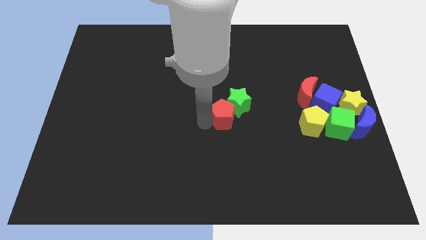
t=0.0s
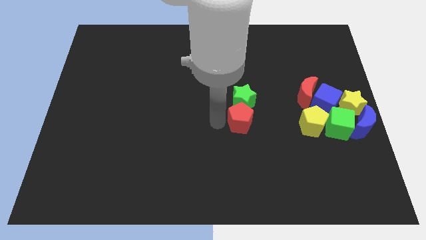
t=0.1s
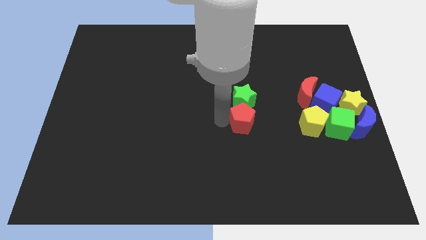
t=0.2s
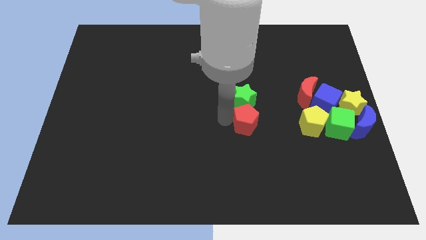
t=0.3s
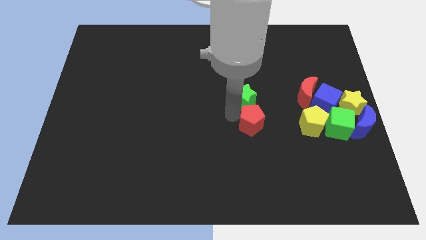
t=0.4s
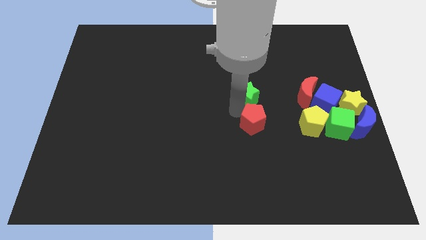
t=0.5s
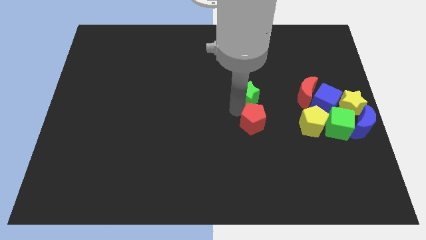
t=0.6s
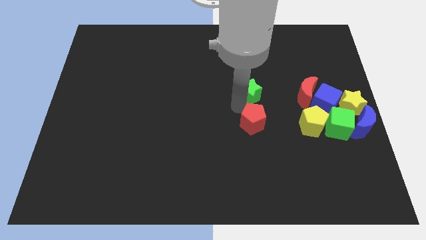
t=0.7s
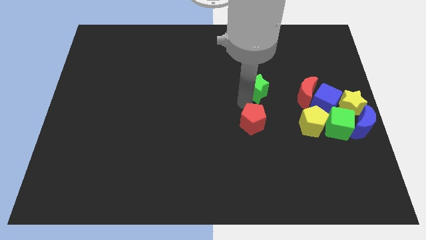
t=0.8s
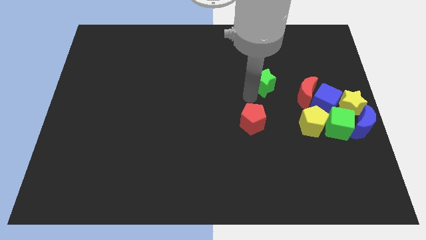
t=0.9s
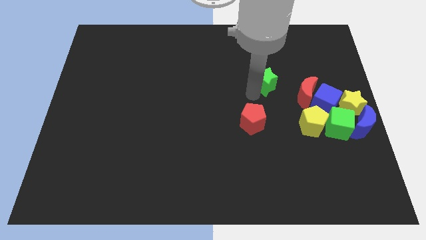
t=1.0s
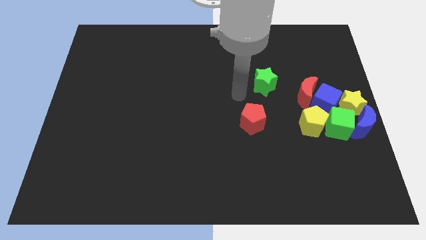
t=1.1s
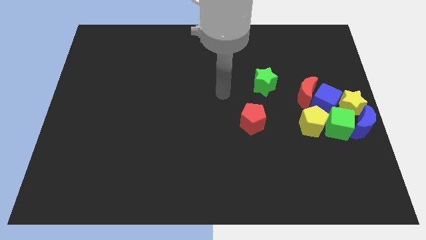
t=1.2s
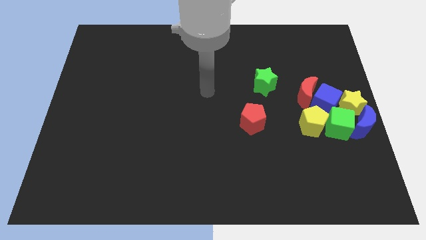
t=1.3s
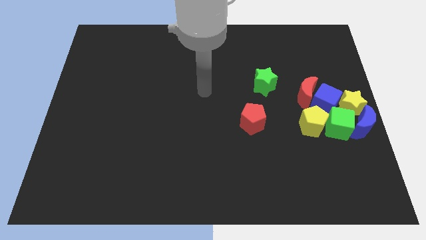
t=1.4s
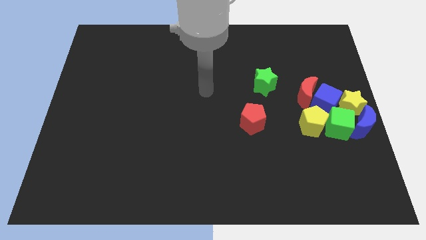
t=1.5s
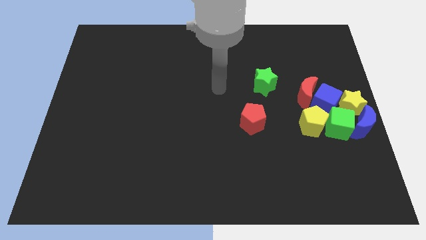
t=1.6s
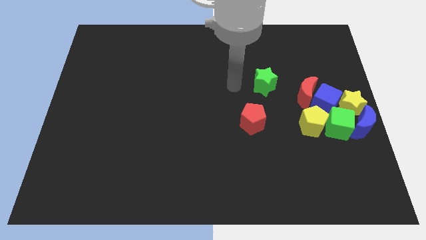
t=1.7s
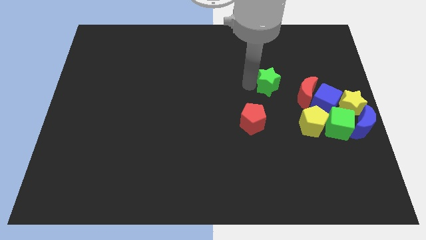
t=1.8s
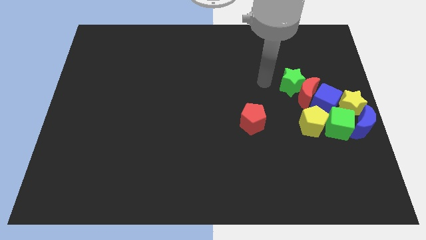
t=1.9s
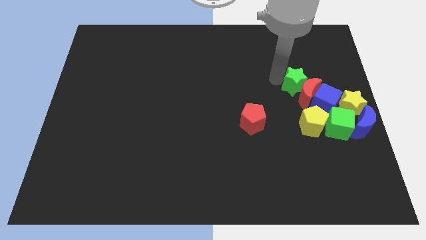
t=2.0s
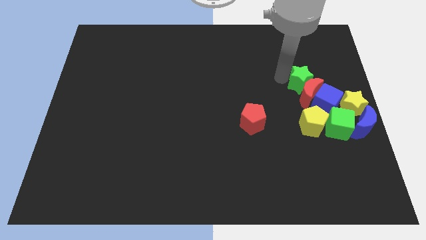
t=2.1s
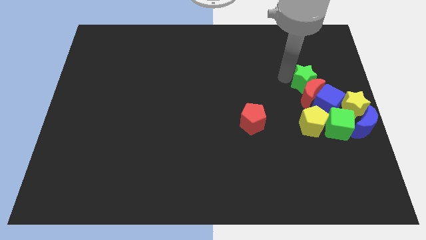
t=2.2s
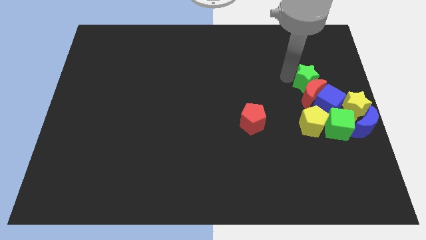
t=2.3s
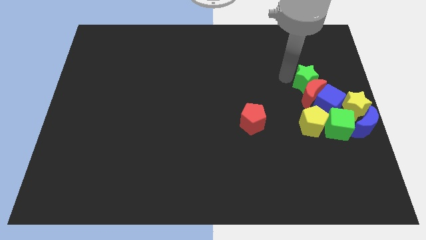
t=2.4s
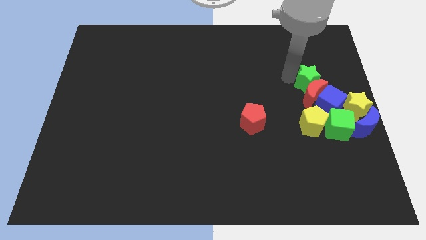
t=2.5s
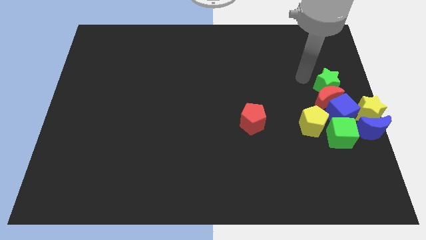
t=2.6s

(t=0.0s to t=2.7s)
push green star above red crescent

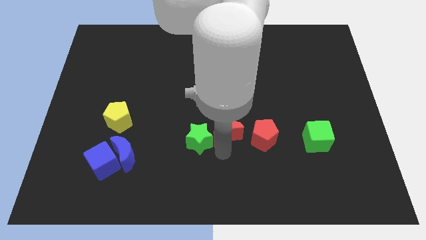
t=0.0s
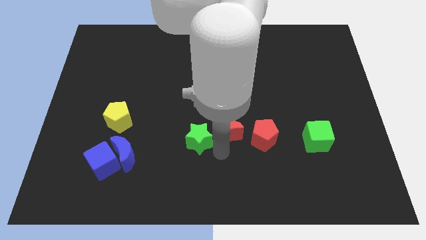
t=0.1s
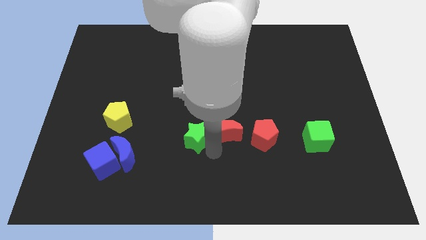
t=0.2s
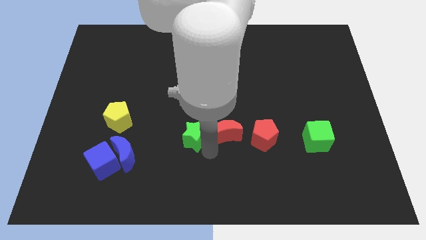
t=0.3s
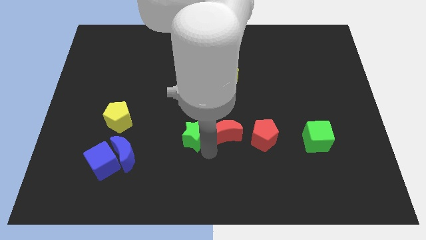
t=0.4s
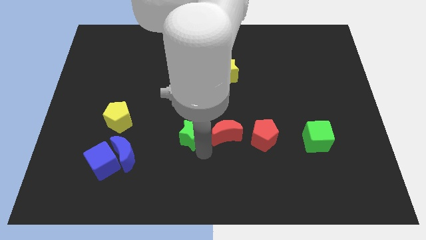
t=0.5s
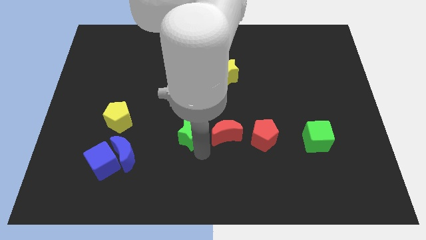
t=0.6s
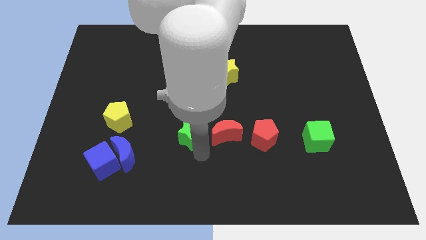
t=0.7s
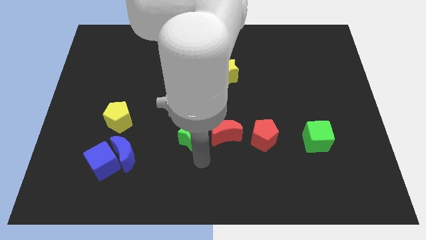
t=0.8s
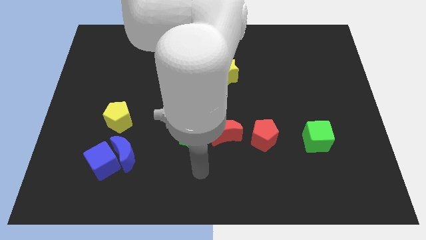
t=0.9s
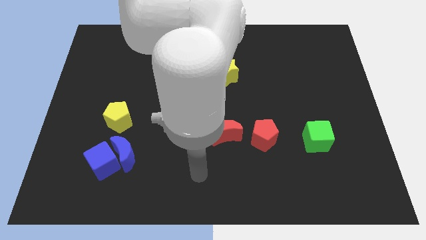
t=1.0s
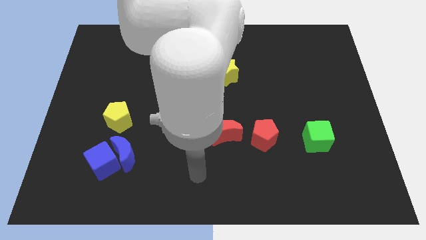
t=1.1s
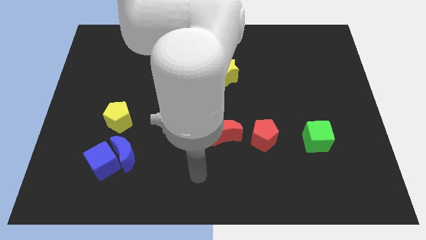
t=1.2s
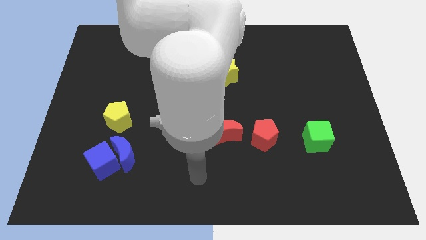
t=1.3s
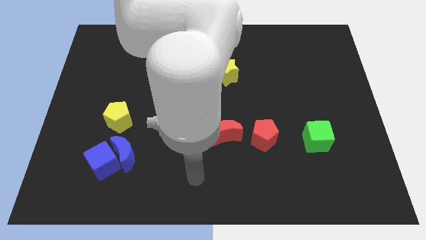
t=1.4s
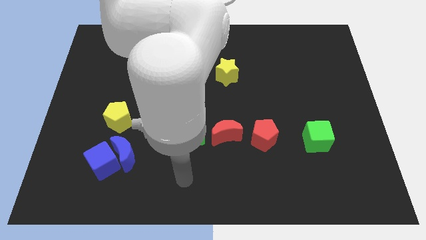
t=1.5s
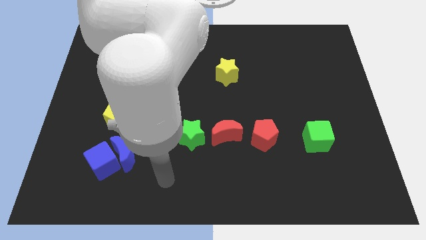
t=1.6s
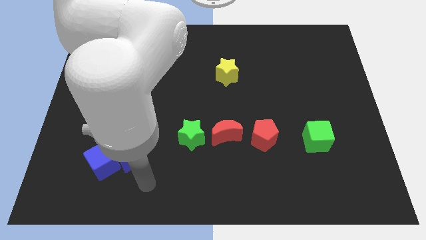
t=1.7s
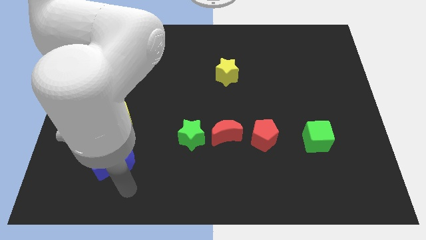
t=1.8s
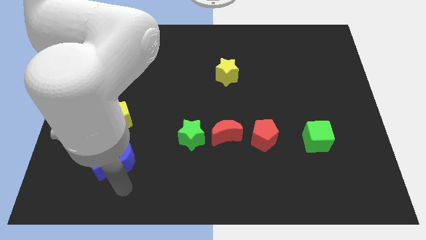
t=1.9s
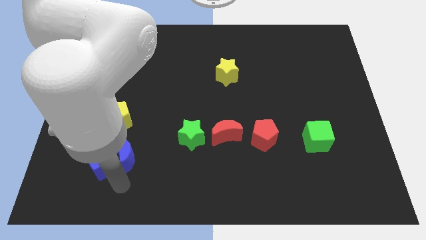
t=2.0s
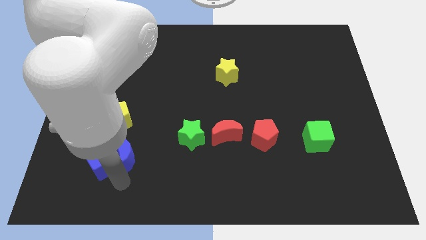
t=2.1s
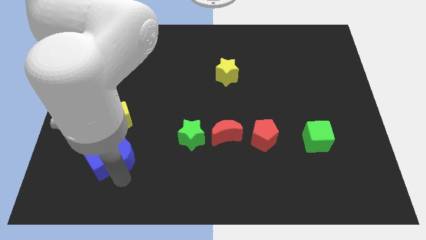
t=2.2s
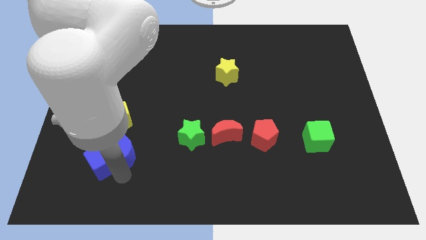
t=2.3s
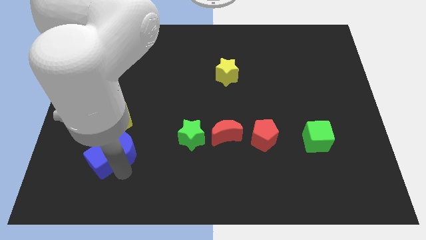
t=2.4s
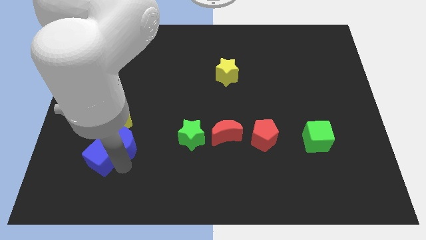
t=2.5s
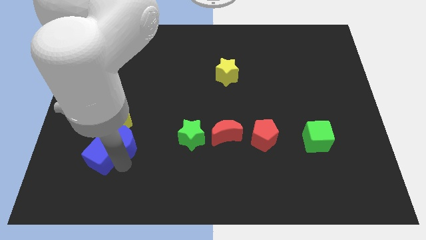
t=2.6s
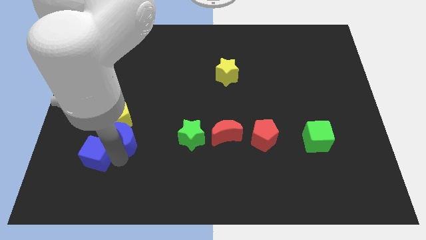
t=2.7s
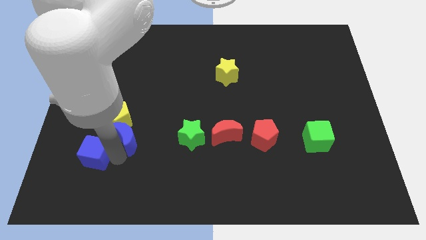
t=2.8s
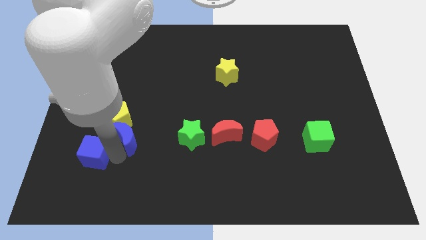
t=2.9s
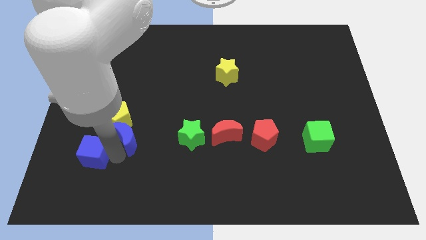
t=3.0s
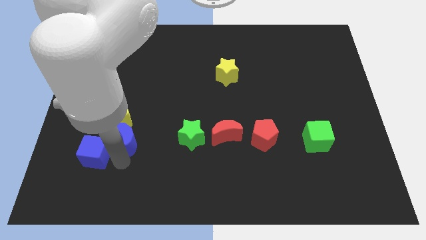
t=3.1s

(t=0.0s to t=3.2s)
separate the blue cube and blue crescent

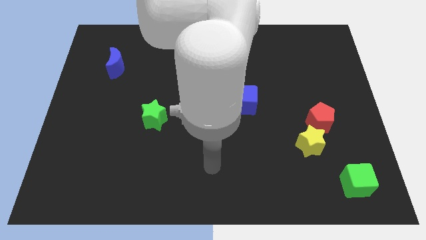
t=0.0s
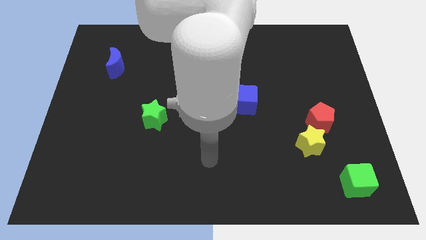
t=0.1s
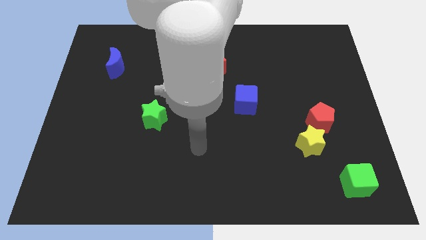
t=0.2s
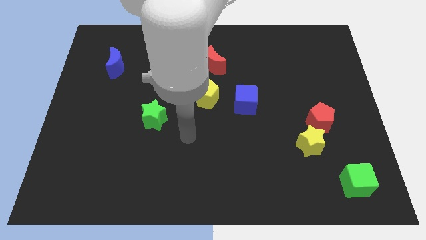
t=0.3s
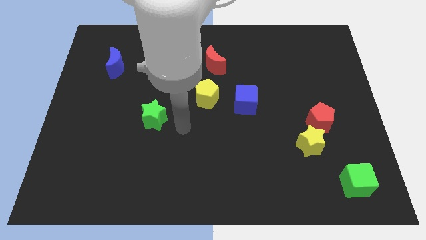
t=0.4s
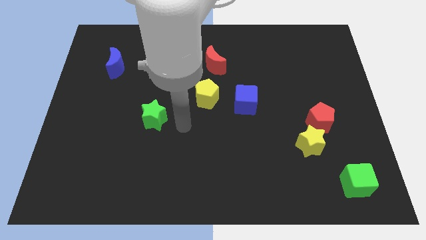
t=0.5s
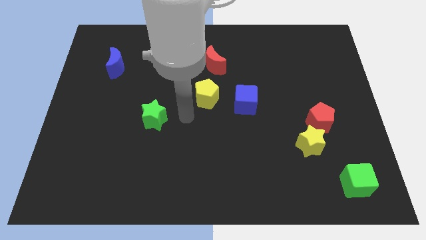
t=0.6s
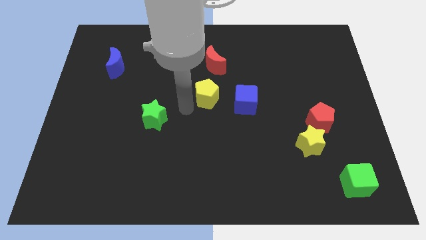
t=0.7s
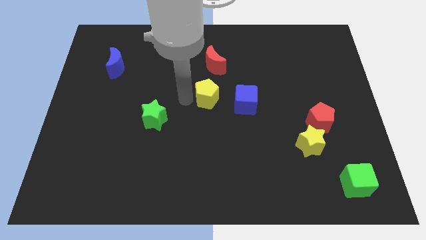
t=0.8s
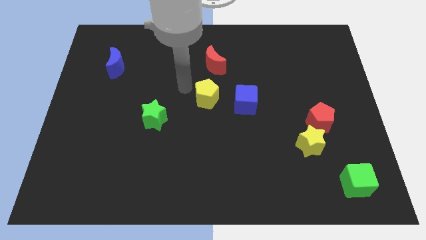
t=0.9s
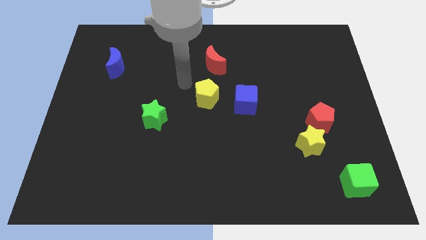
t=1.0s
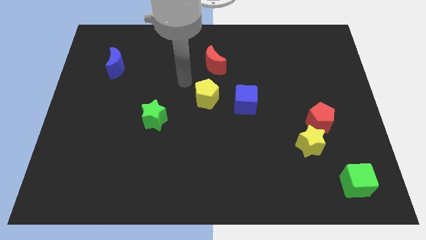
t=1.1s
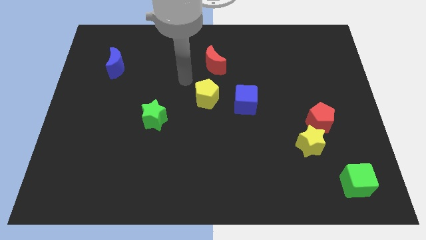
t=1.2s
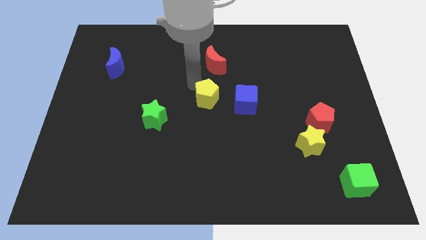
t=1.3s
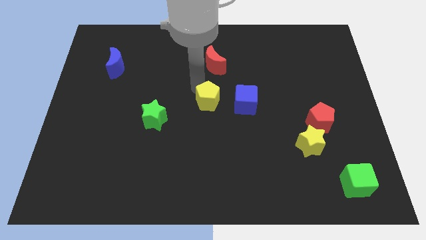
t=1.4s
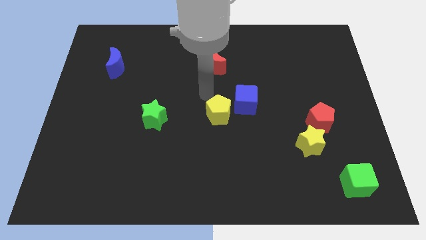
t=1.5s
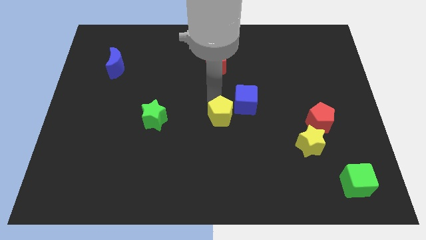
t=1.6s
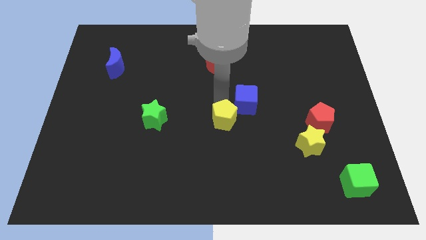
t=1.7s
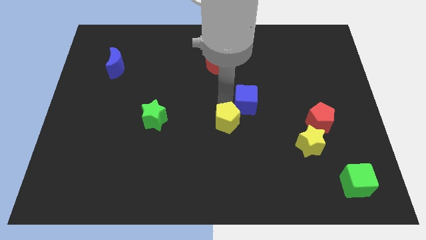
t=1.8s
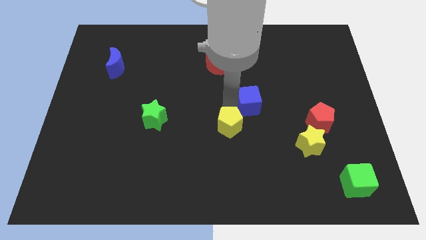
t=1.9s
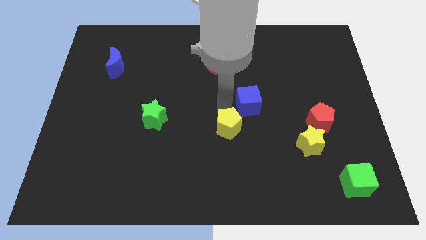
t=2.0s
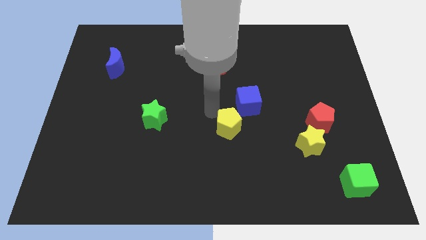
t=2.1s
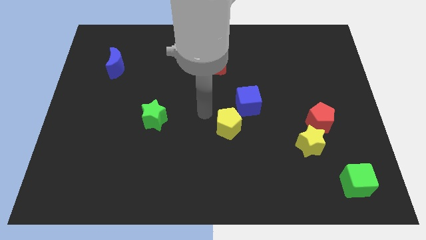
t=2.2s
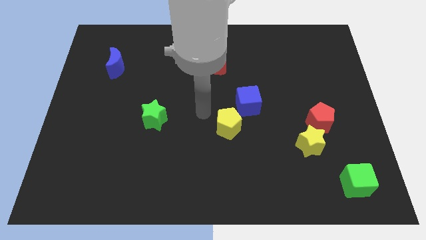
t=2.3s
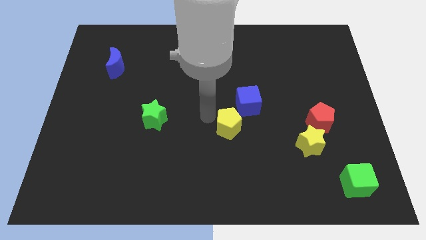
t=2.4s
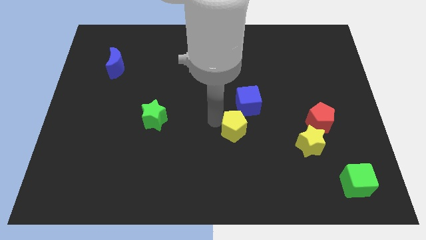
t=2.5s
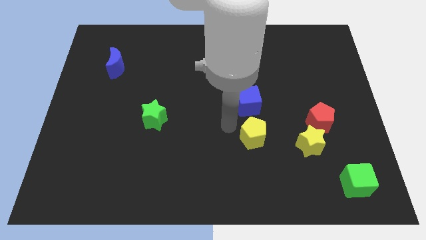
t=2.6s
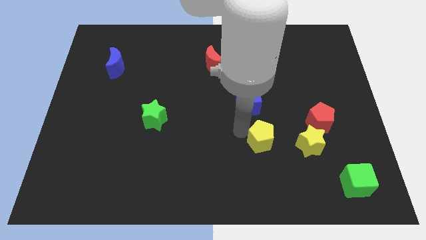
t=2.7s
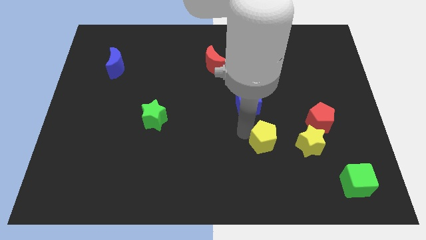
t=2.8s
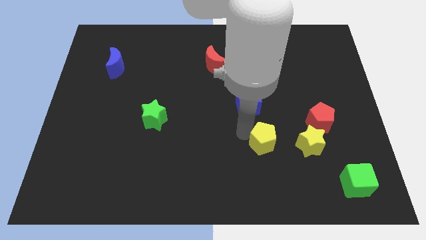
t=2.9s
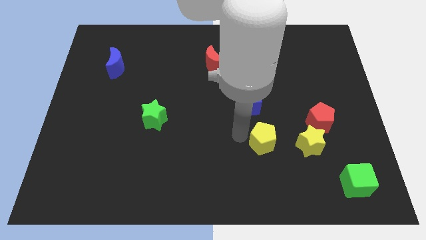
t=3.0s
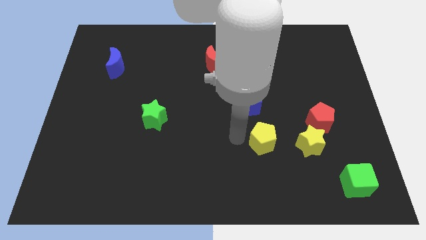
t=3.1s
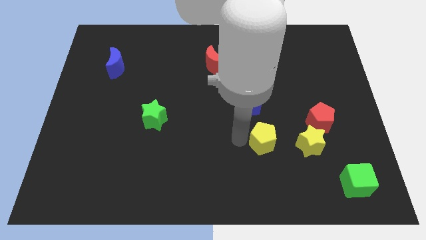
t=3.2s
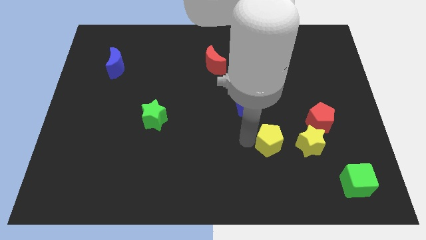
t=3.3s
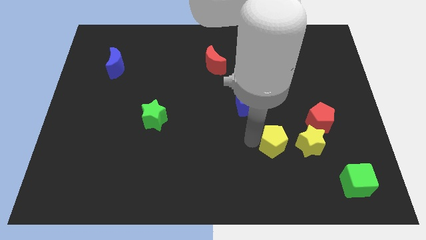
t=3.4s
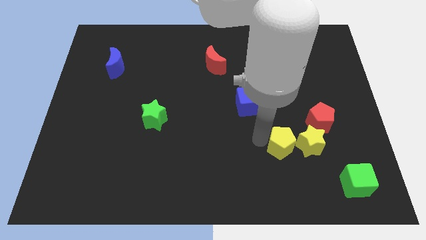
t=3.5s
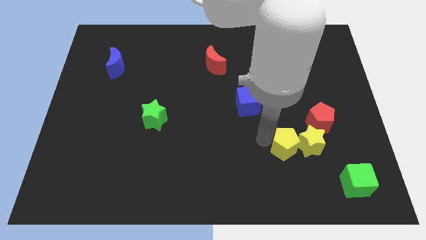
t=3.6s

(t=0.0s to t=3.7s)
place yellow pentagon to the left side of yellow star
